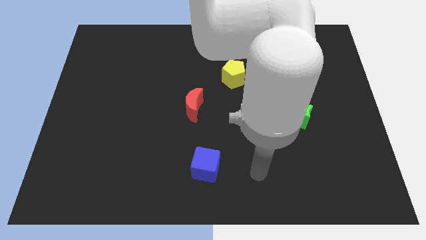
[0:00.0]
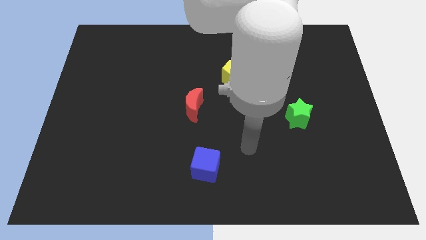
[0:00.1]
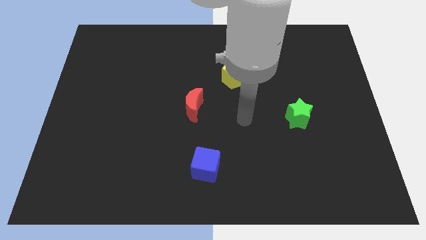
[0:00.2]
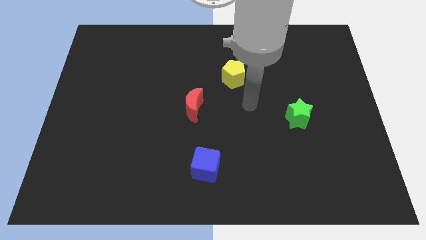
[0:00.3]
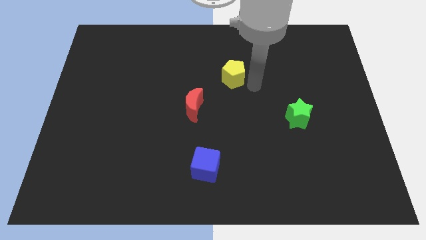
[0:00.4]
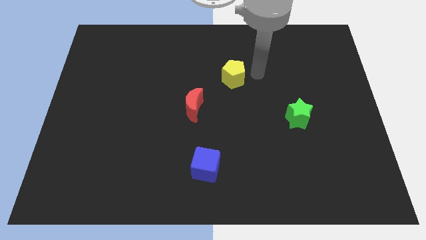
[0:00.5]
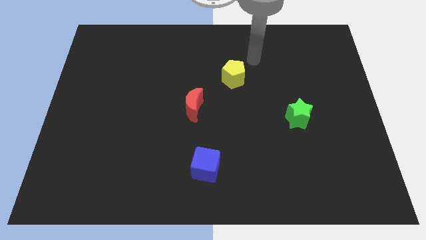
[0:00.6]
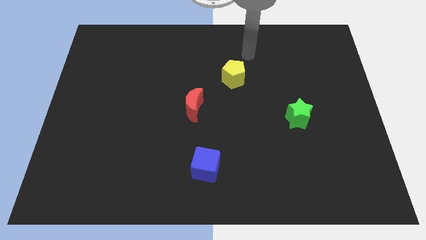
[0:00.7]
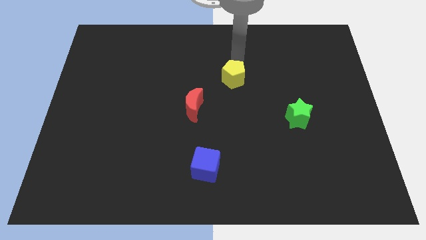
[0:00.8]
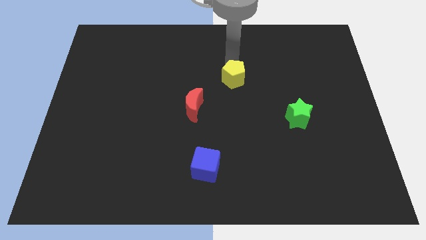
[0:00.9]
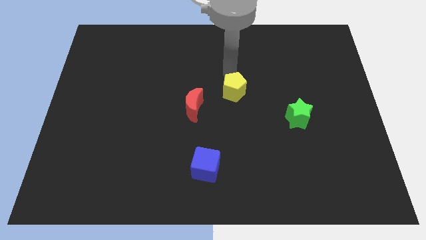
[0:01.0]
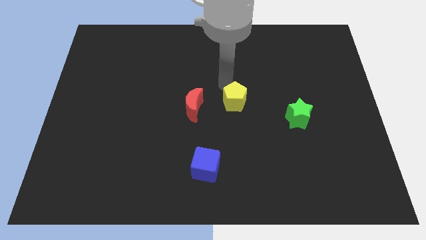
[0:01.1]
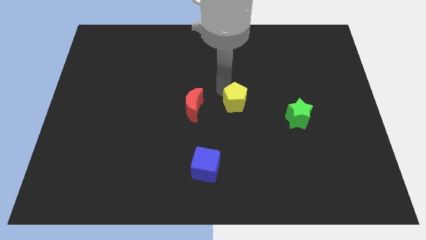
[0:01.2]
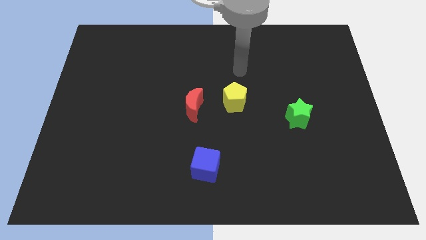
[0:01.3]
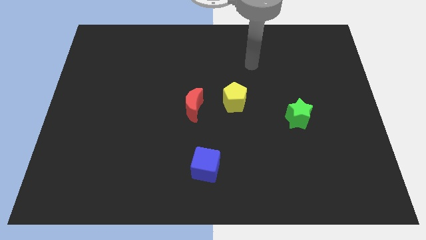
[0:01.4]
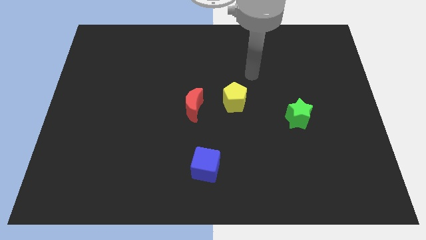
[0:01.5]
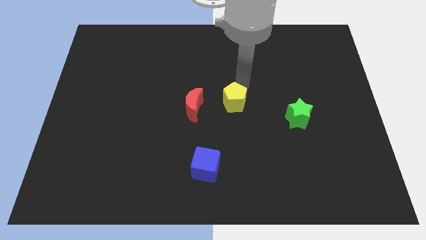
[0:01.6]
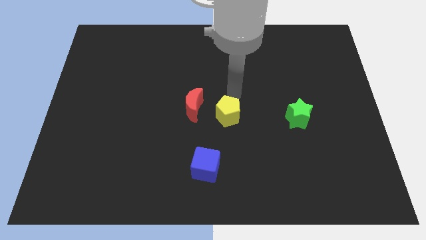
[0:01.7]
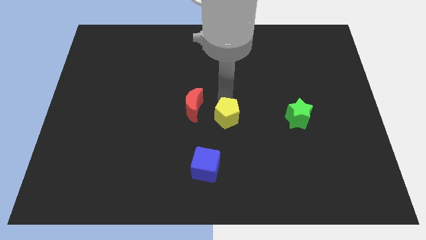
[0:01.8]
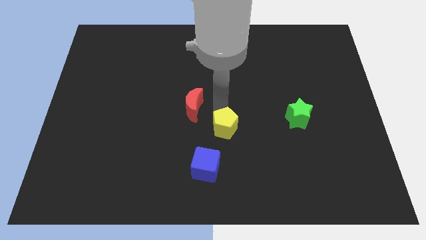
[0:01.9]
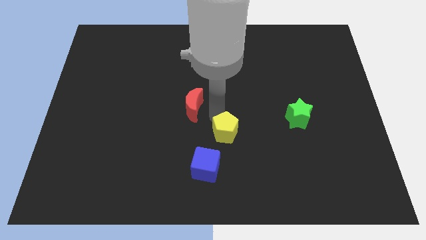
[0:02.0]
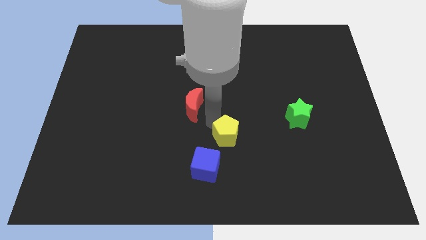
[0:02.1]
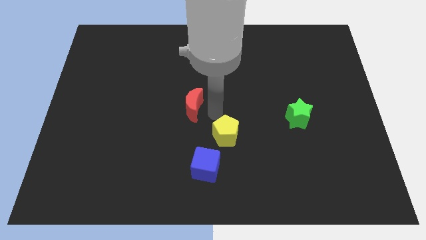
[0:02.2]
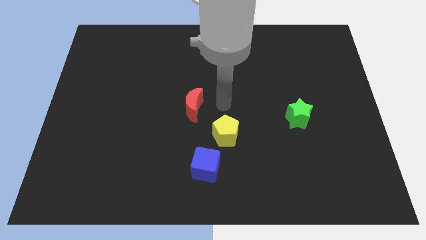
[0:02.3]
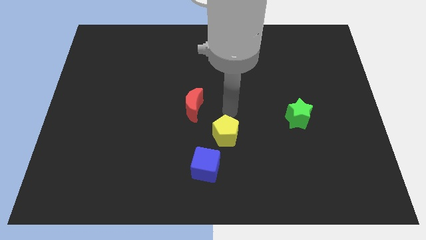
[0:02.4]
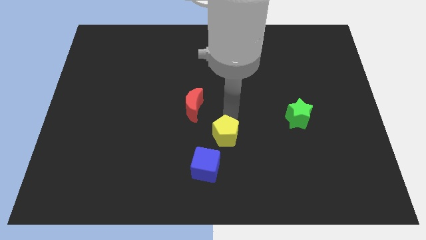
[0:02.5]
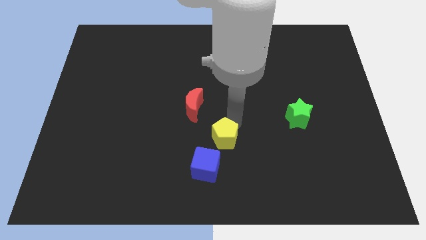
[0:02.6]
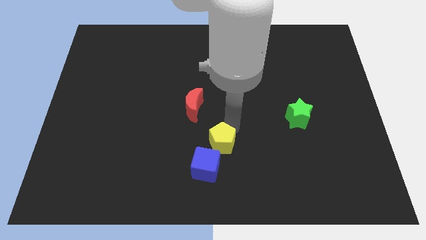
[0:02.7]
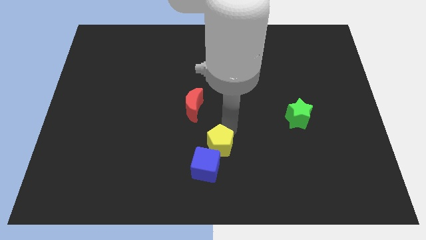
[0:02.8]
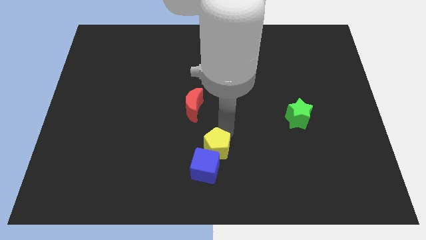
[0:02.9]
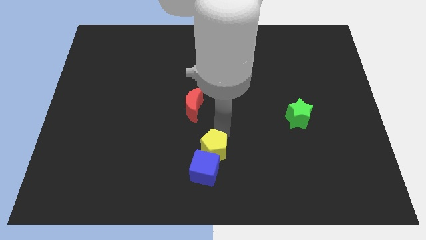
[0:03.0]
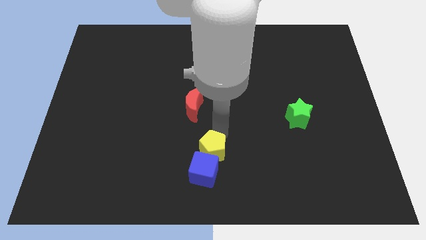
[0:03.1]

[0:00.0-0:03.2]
slide the pentagon towards the blue block

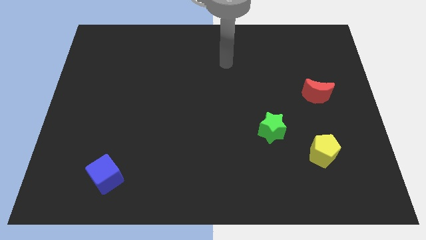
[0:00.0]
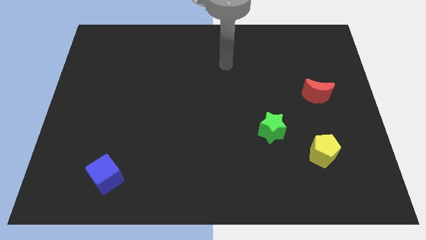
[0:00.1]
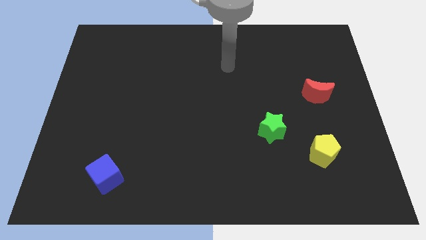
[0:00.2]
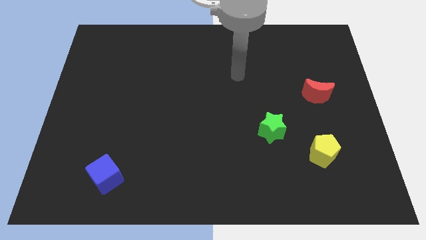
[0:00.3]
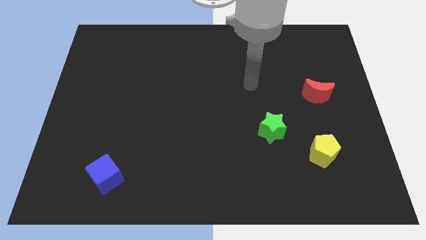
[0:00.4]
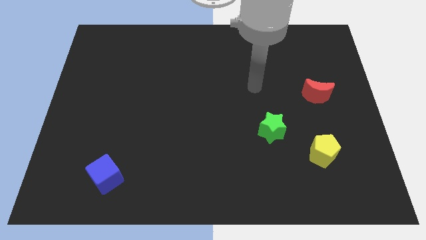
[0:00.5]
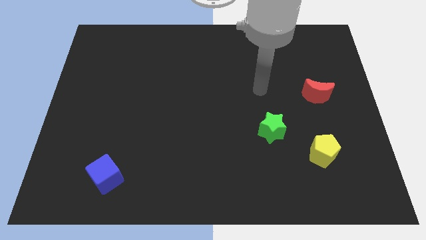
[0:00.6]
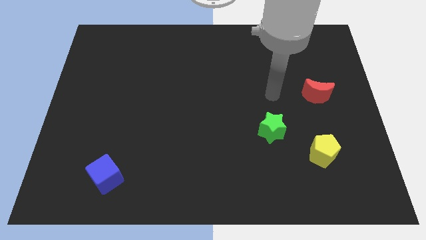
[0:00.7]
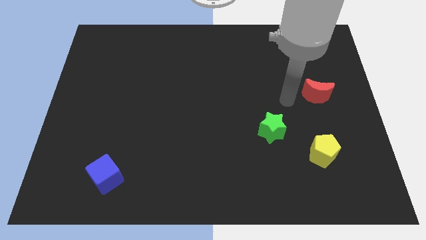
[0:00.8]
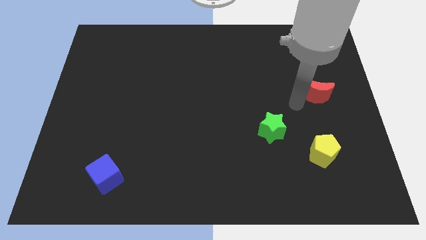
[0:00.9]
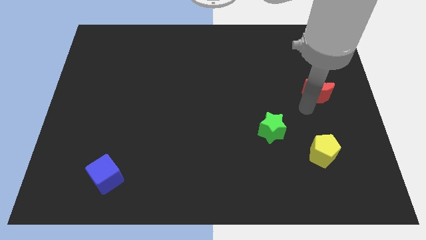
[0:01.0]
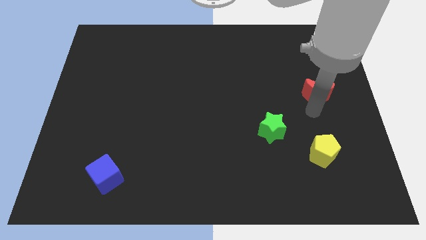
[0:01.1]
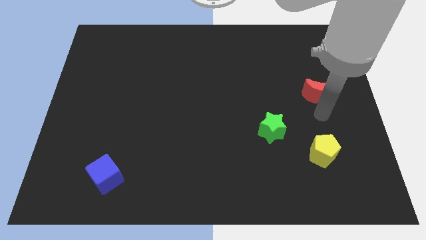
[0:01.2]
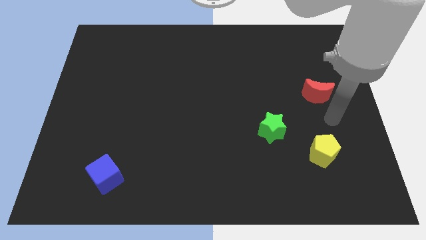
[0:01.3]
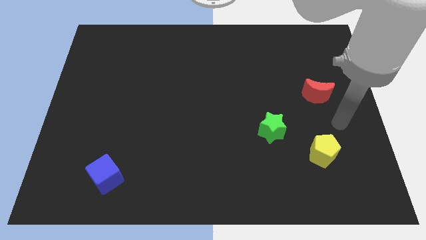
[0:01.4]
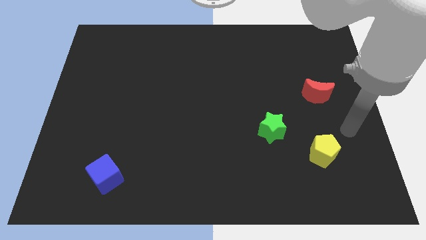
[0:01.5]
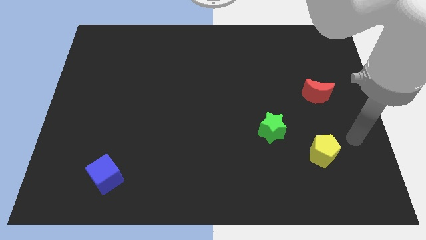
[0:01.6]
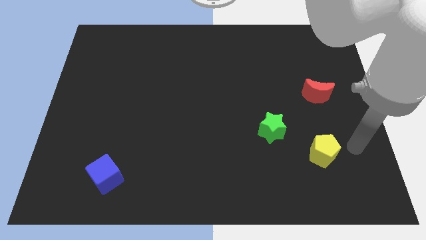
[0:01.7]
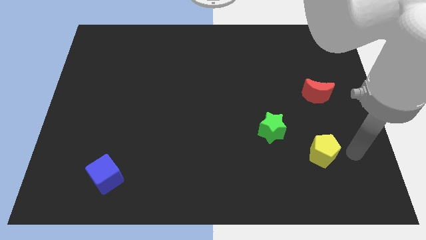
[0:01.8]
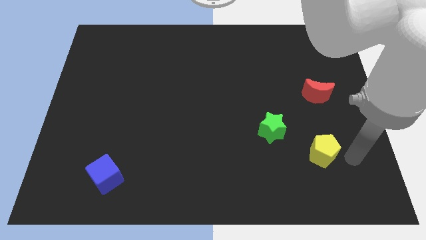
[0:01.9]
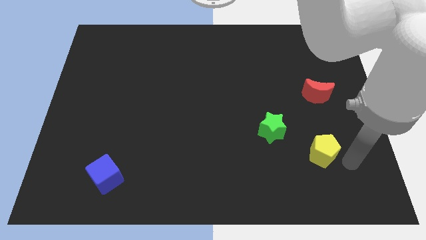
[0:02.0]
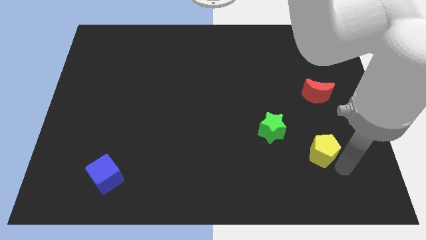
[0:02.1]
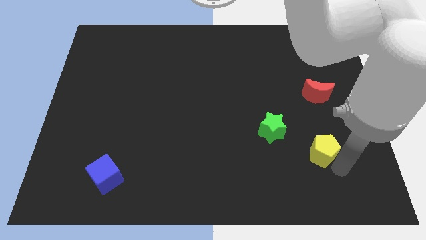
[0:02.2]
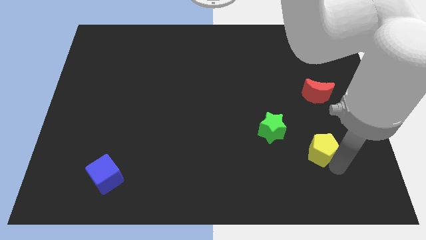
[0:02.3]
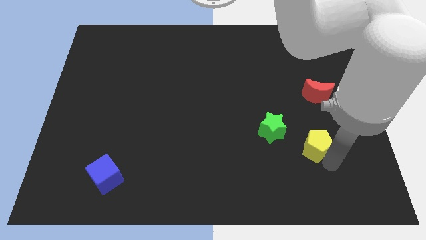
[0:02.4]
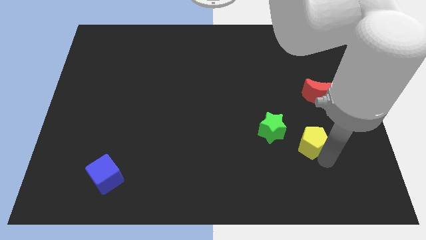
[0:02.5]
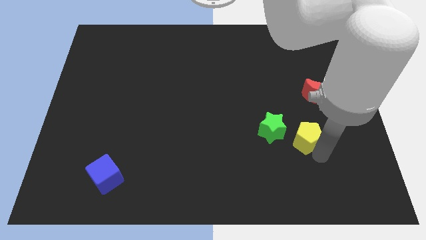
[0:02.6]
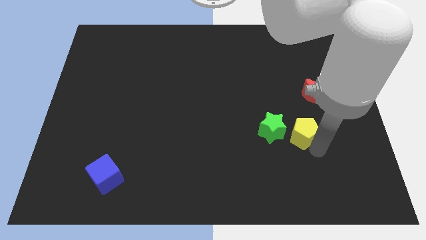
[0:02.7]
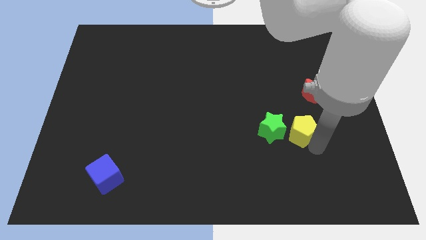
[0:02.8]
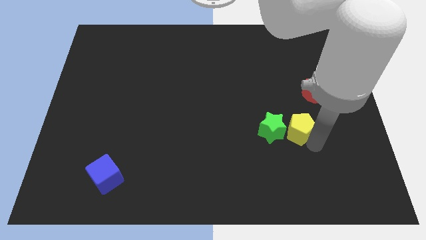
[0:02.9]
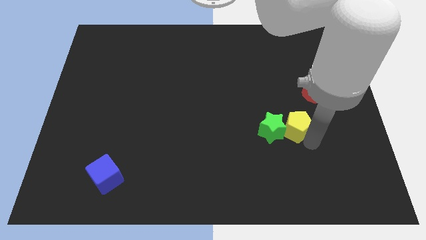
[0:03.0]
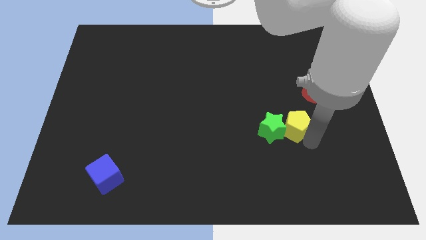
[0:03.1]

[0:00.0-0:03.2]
push the pentagon towards the green block

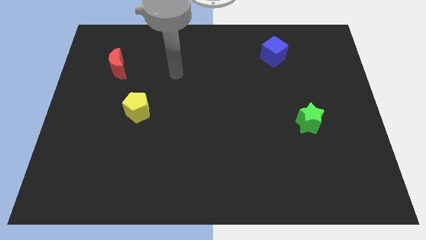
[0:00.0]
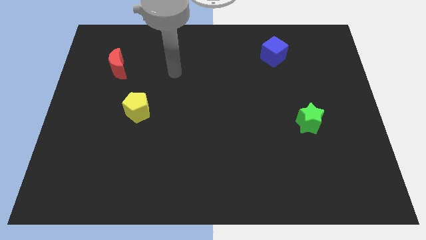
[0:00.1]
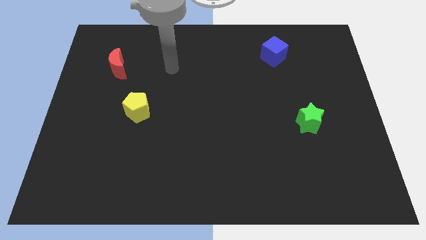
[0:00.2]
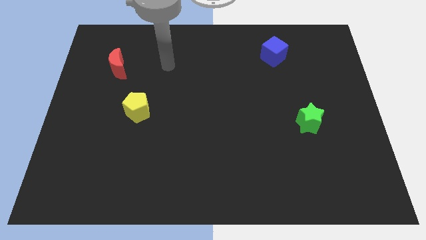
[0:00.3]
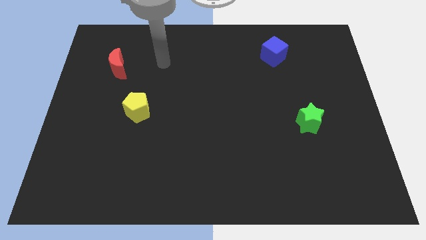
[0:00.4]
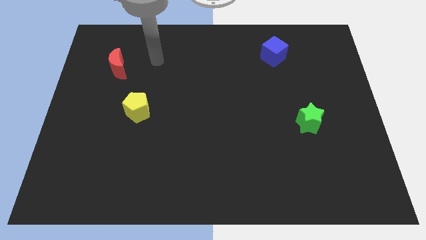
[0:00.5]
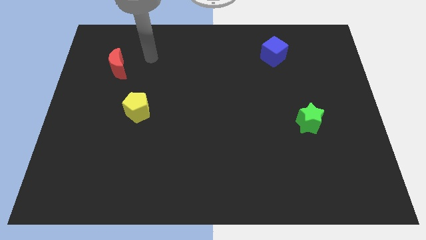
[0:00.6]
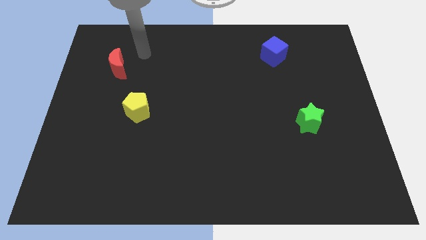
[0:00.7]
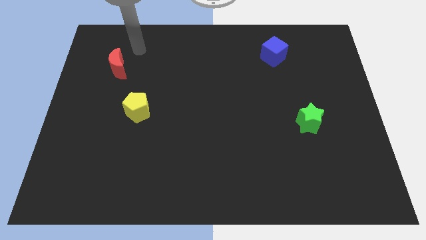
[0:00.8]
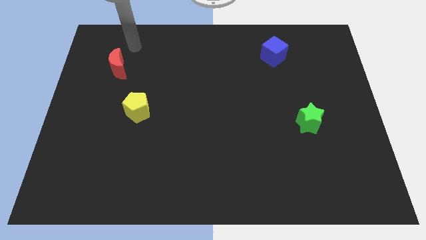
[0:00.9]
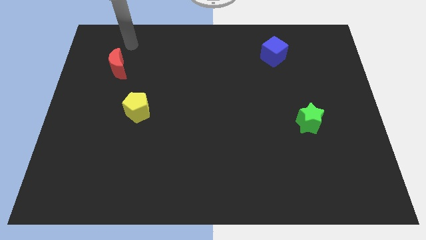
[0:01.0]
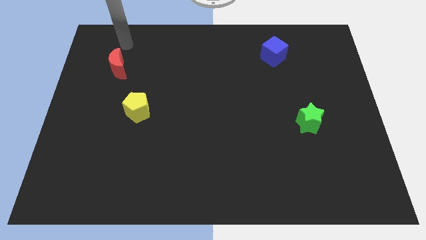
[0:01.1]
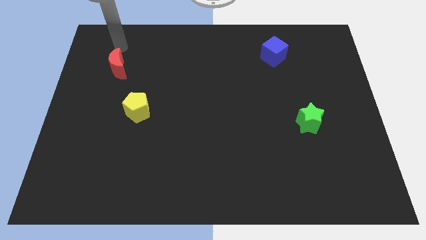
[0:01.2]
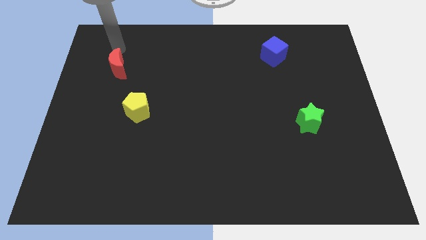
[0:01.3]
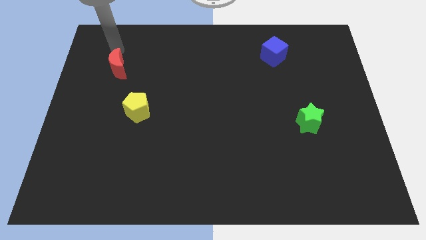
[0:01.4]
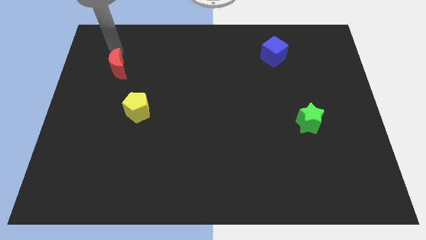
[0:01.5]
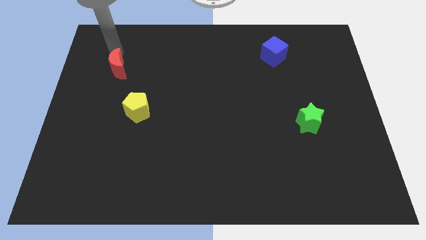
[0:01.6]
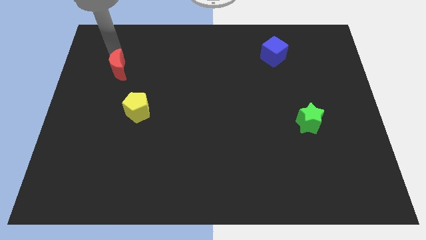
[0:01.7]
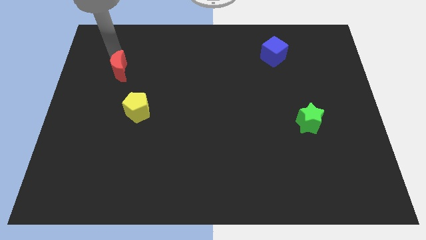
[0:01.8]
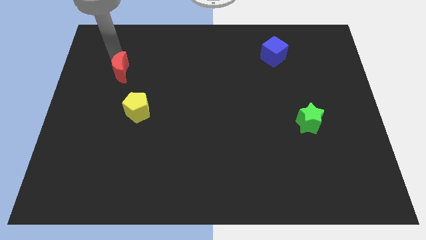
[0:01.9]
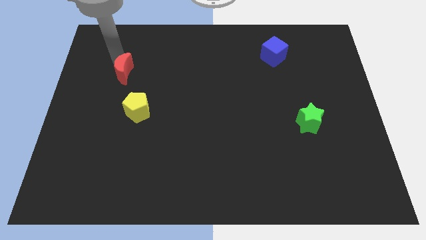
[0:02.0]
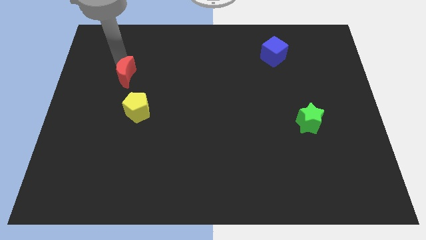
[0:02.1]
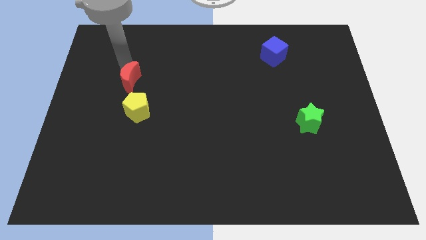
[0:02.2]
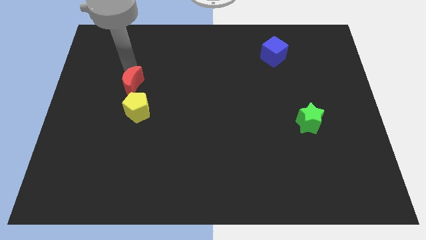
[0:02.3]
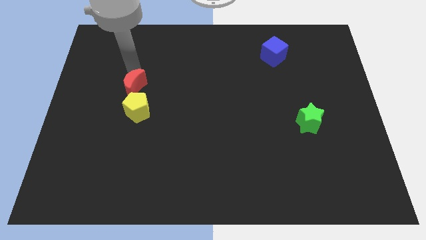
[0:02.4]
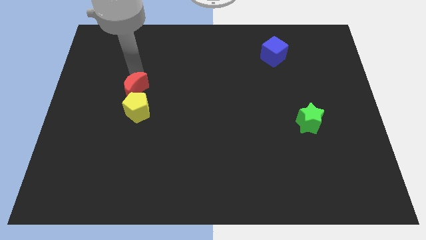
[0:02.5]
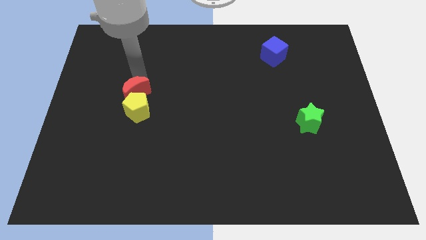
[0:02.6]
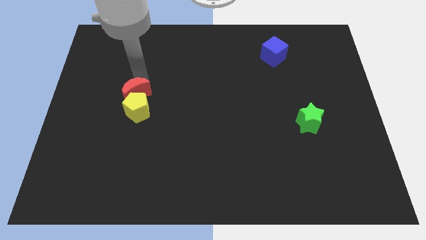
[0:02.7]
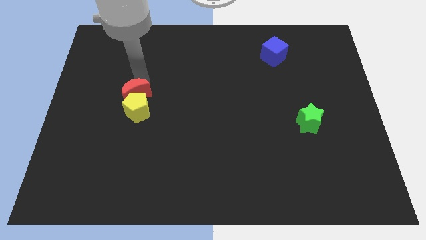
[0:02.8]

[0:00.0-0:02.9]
slide the red block close to the pentagon
